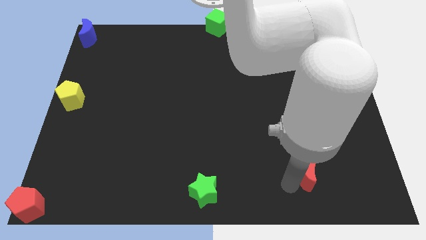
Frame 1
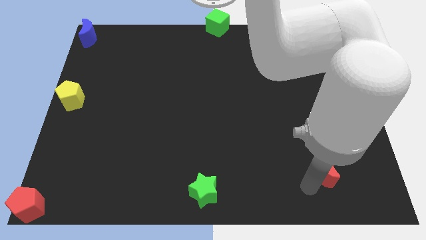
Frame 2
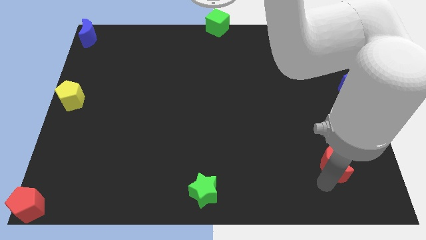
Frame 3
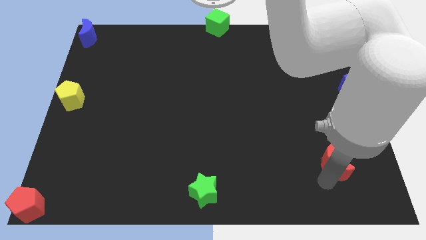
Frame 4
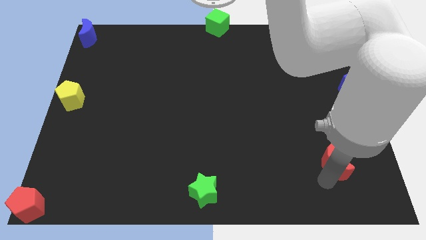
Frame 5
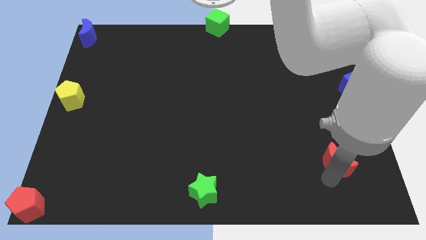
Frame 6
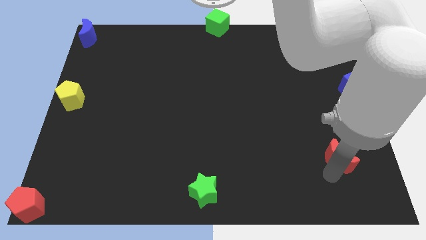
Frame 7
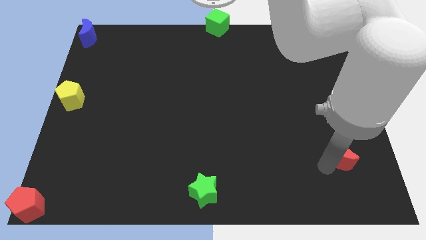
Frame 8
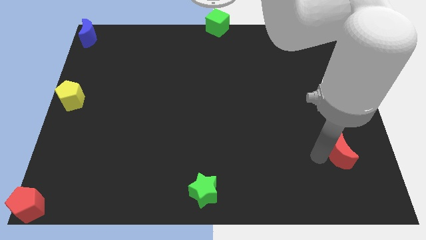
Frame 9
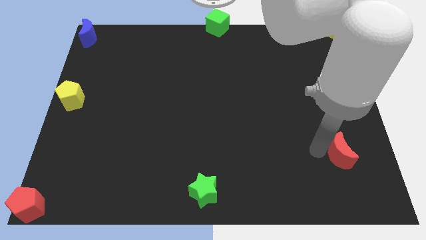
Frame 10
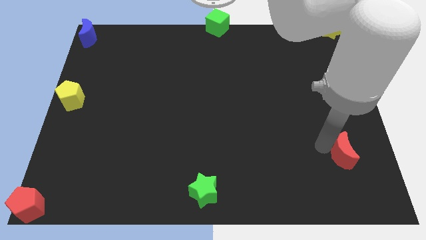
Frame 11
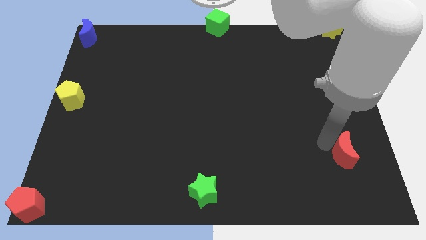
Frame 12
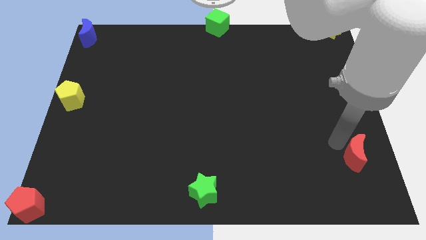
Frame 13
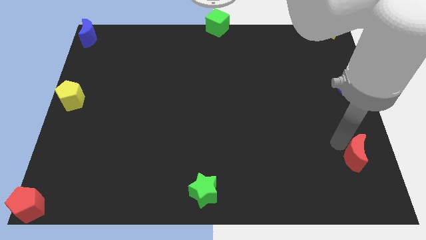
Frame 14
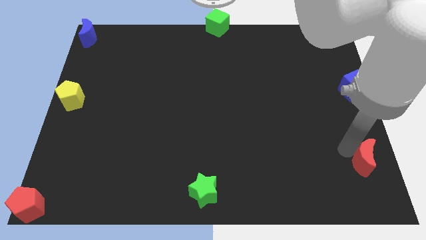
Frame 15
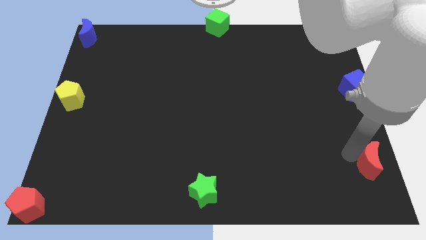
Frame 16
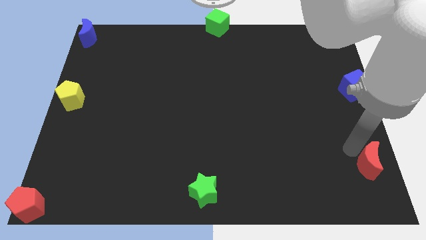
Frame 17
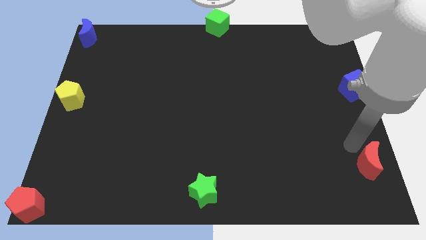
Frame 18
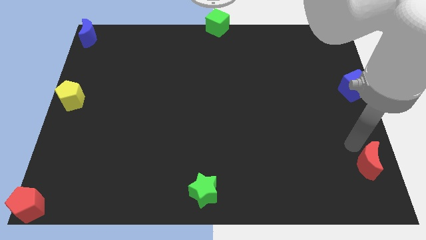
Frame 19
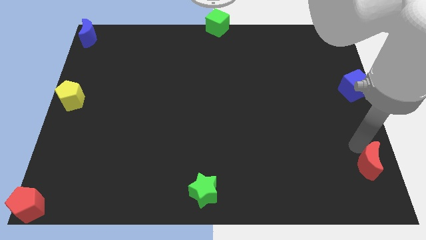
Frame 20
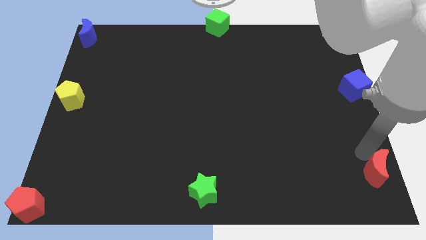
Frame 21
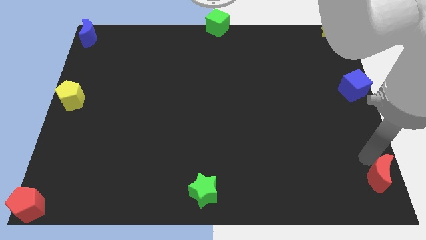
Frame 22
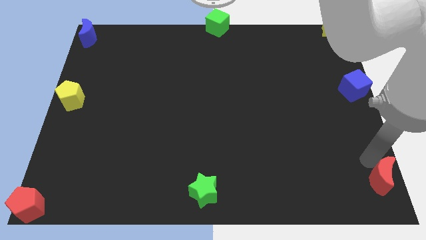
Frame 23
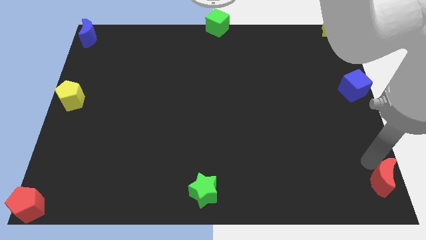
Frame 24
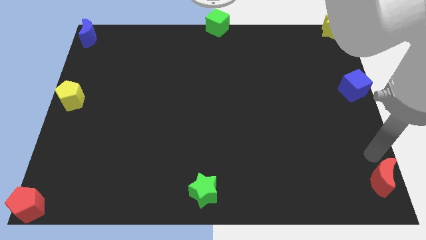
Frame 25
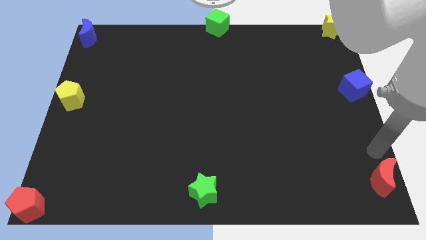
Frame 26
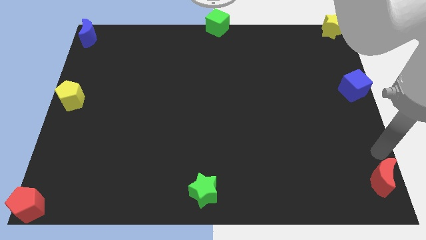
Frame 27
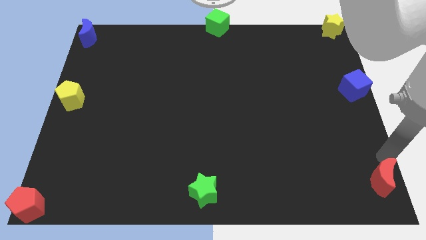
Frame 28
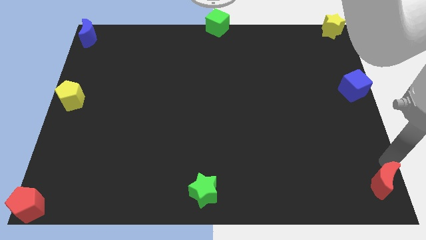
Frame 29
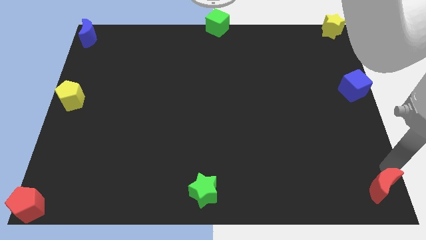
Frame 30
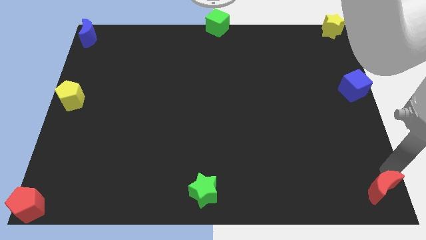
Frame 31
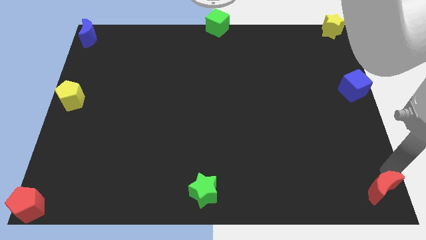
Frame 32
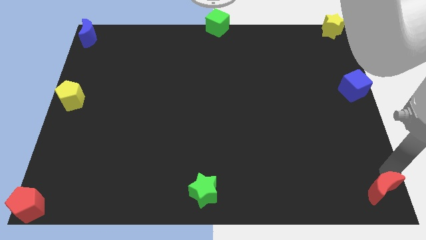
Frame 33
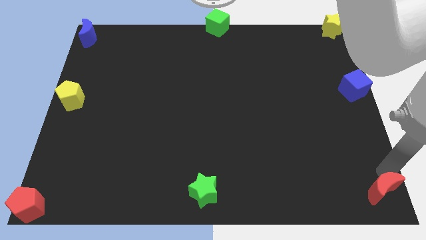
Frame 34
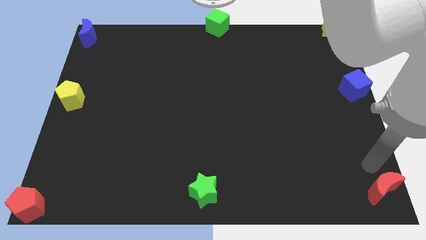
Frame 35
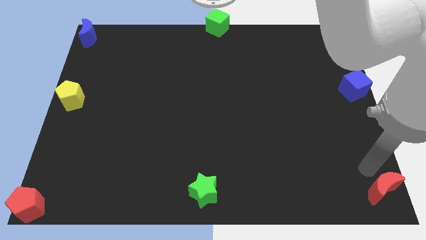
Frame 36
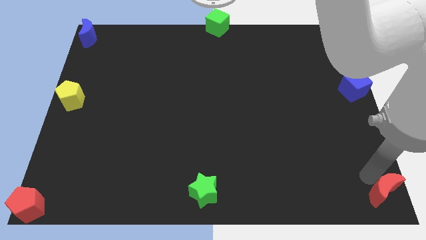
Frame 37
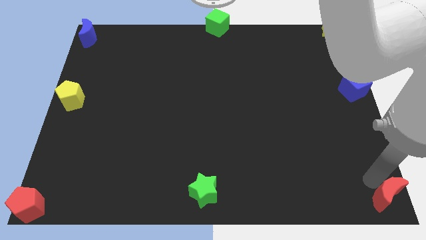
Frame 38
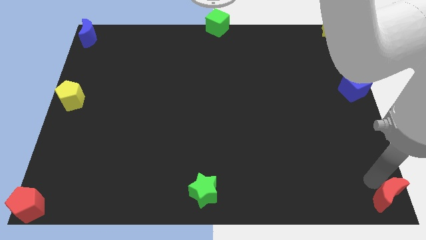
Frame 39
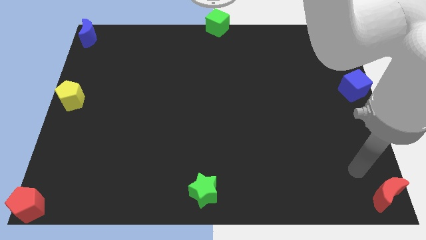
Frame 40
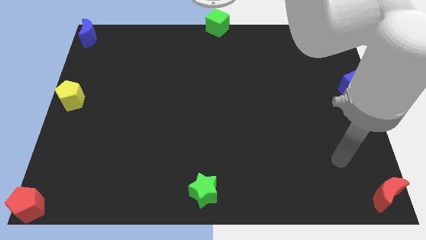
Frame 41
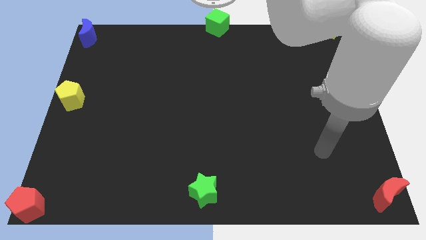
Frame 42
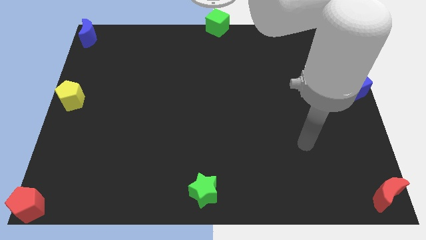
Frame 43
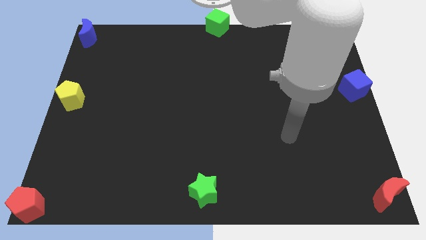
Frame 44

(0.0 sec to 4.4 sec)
push the red crescent to the bottom right of the board

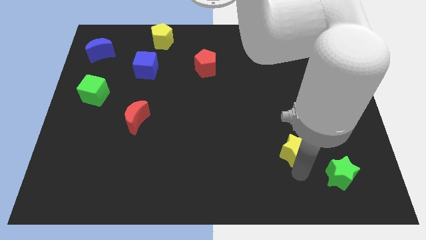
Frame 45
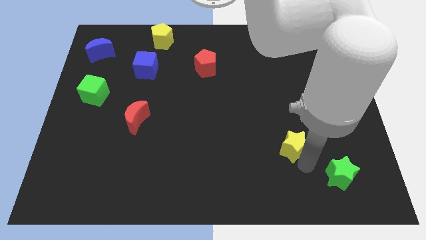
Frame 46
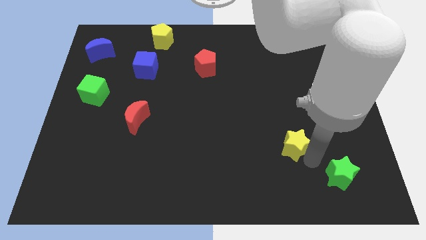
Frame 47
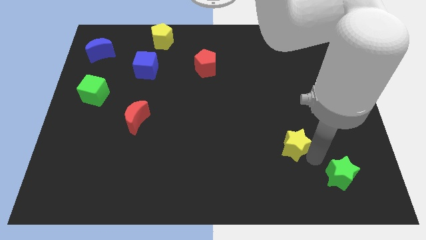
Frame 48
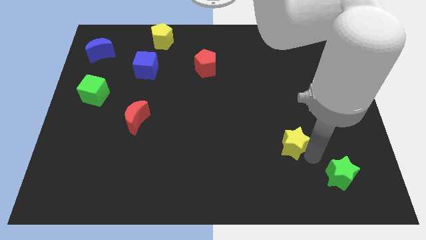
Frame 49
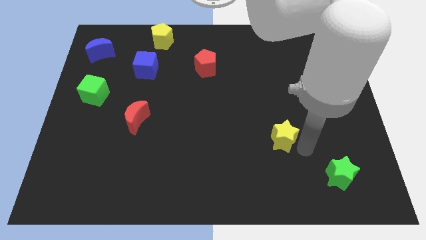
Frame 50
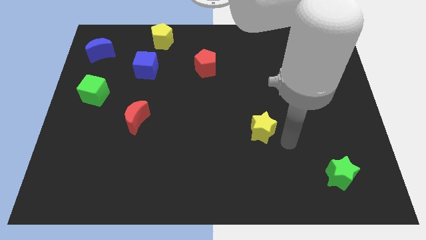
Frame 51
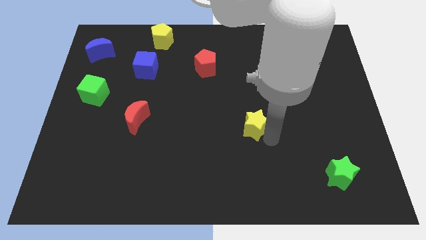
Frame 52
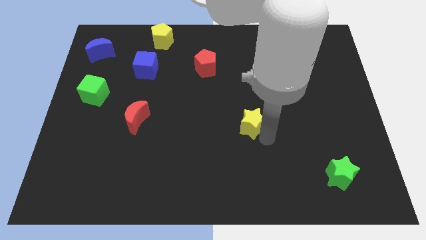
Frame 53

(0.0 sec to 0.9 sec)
push the yellow star away from the green star

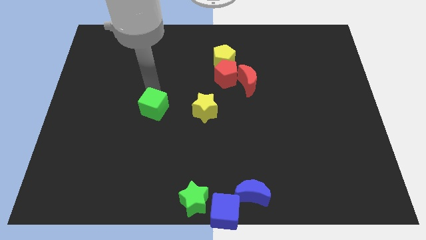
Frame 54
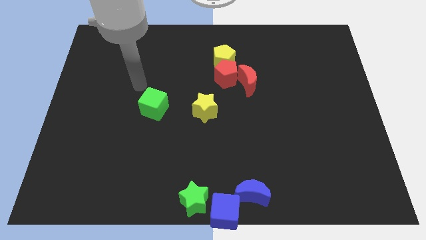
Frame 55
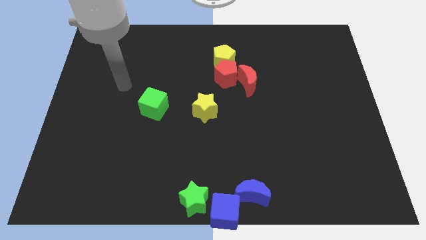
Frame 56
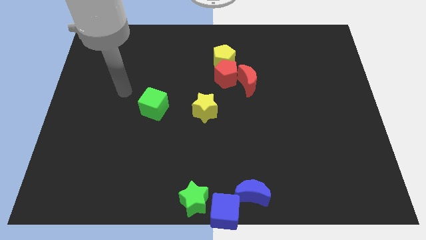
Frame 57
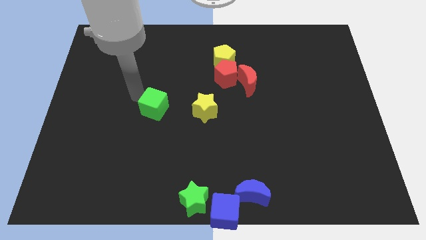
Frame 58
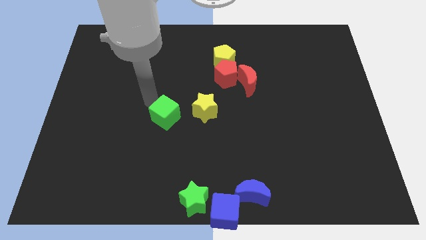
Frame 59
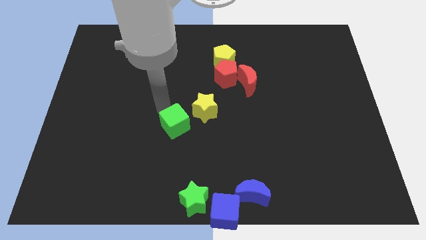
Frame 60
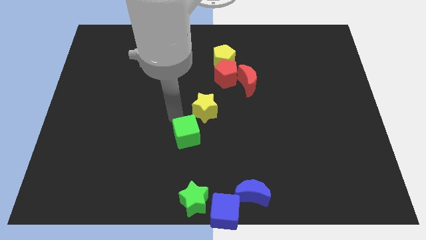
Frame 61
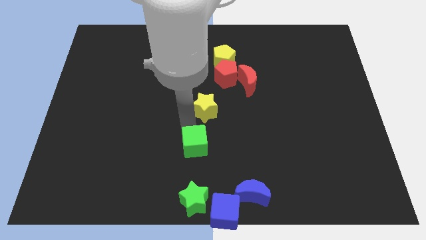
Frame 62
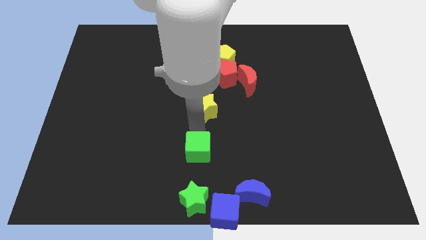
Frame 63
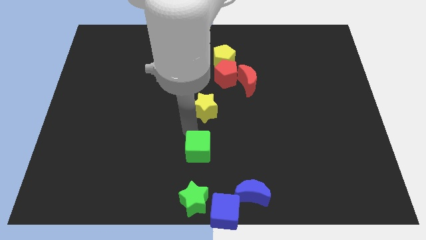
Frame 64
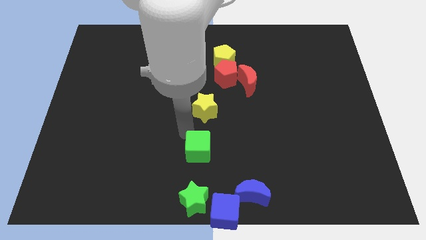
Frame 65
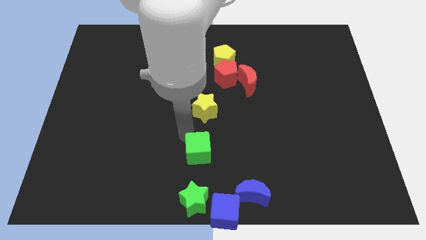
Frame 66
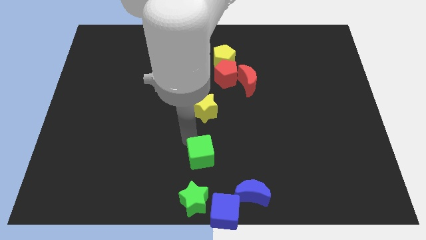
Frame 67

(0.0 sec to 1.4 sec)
slide green cube below yellow star

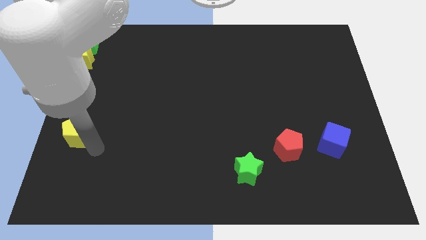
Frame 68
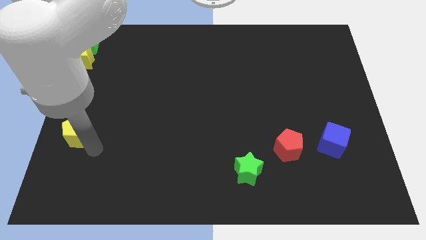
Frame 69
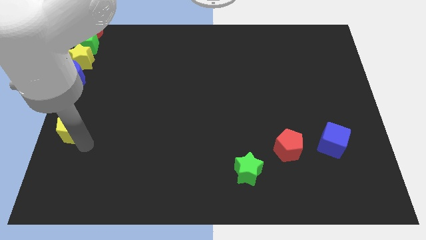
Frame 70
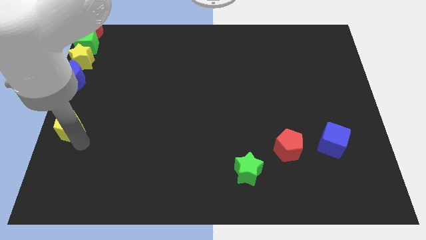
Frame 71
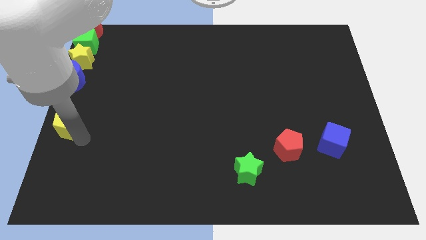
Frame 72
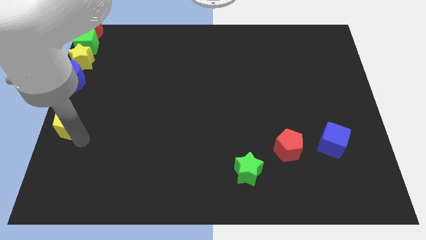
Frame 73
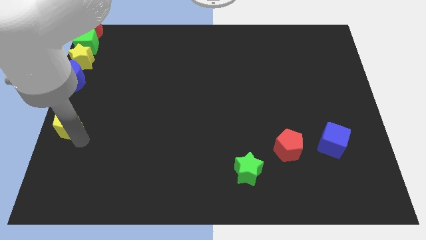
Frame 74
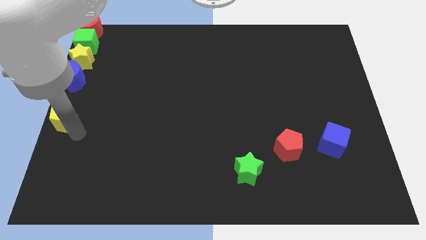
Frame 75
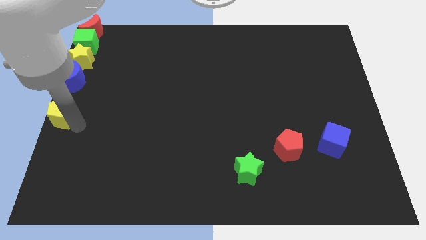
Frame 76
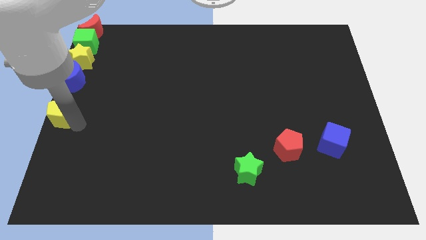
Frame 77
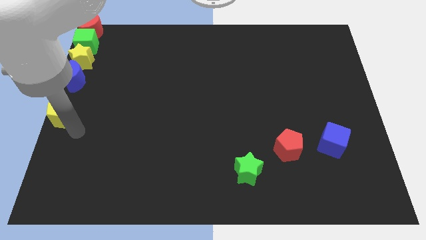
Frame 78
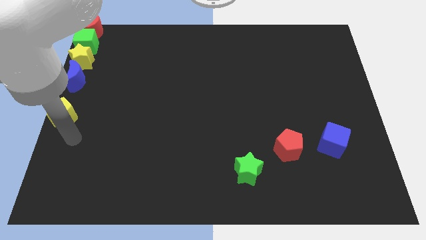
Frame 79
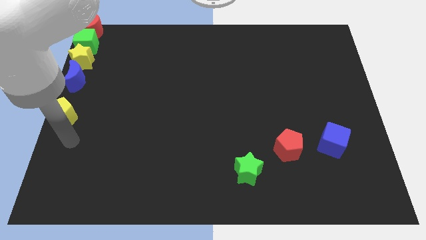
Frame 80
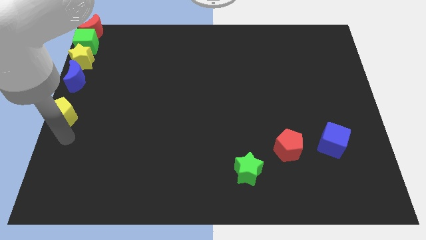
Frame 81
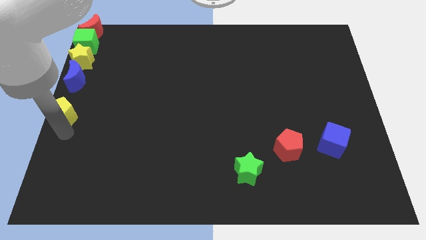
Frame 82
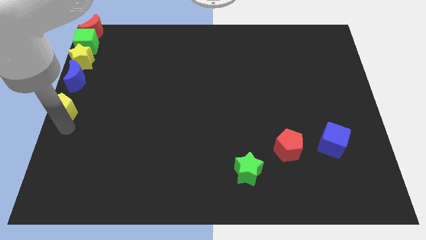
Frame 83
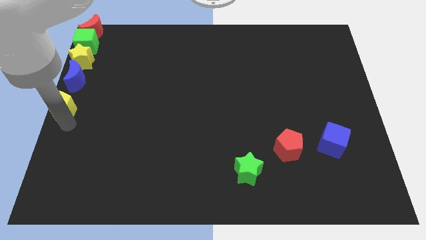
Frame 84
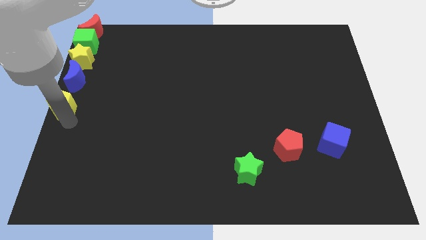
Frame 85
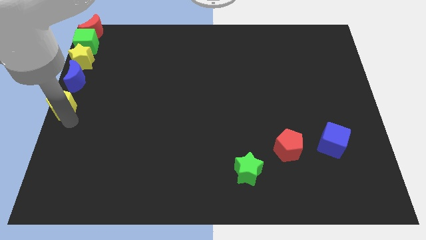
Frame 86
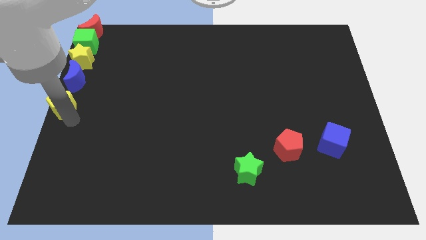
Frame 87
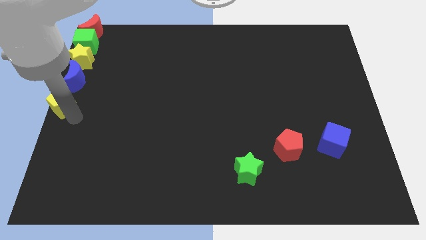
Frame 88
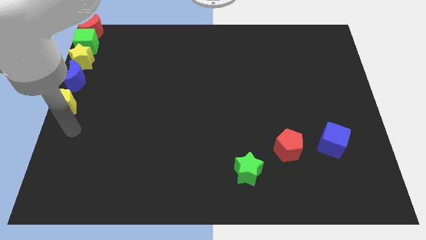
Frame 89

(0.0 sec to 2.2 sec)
arrange the yellow pentagon at the center left of the board

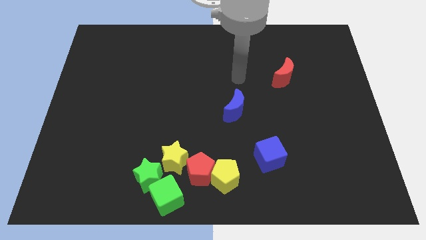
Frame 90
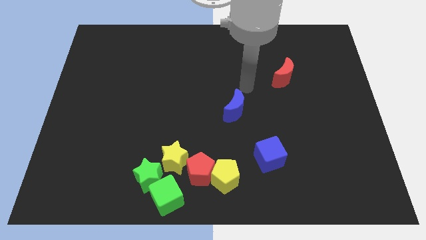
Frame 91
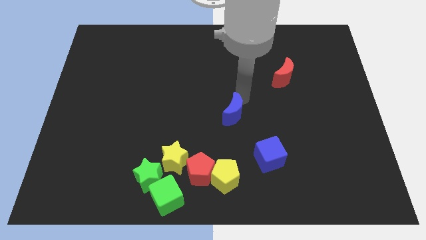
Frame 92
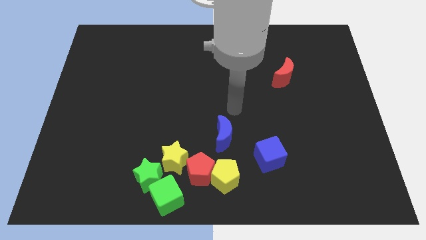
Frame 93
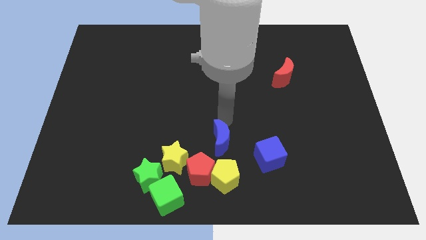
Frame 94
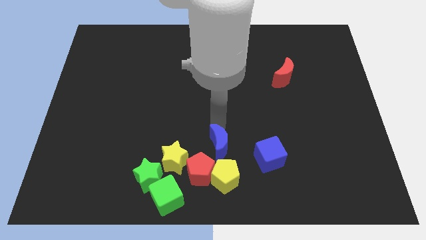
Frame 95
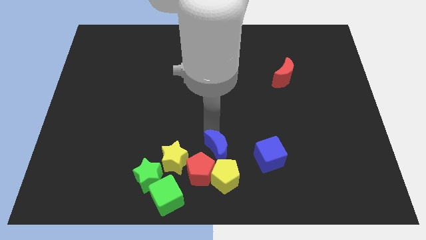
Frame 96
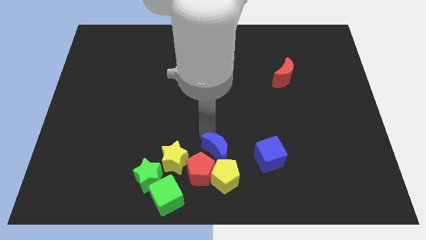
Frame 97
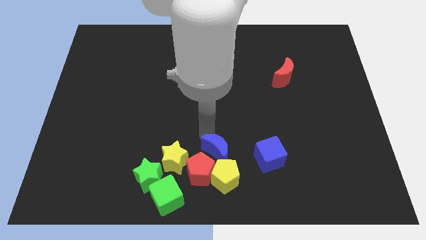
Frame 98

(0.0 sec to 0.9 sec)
move the blue crescent close to the red pentagon
